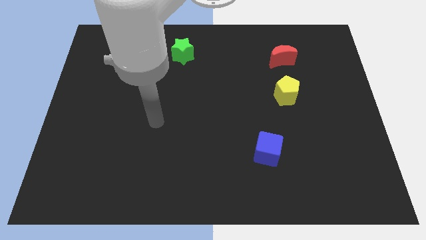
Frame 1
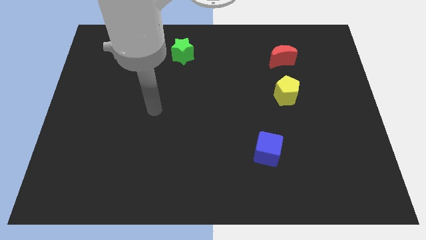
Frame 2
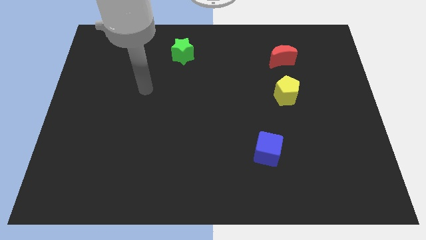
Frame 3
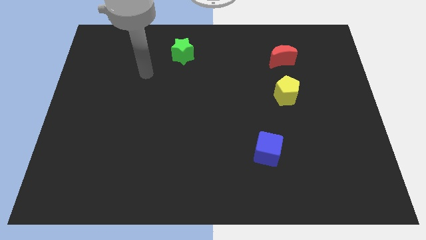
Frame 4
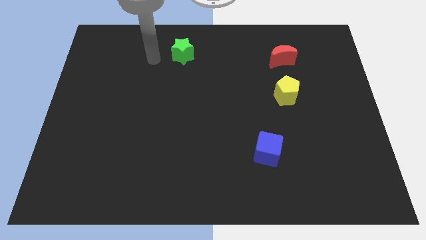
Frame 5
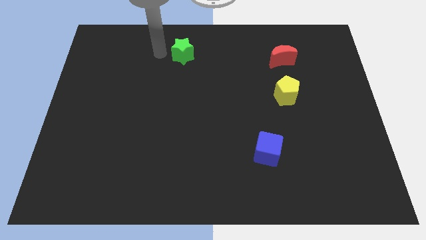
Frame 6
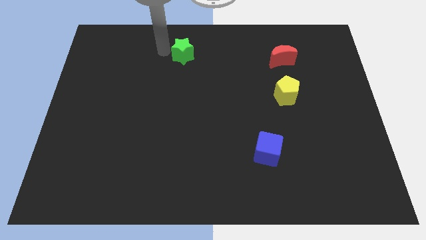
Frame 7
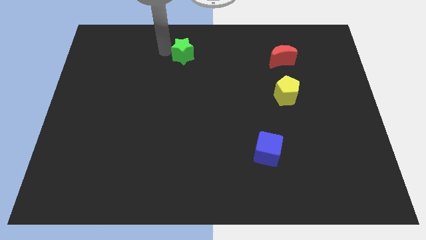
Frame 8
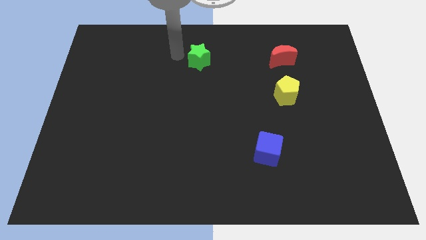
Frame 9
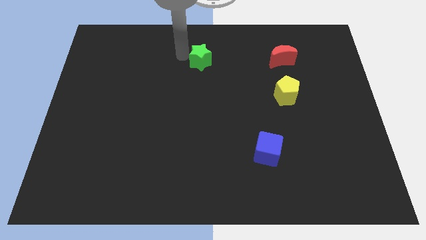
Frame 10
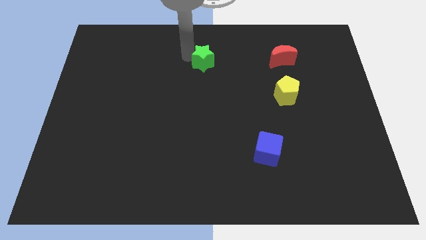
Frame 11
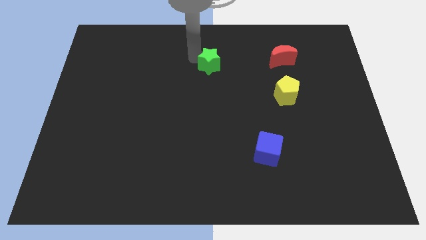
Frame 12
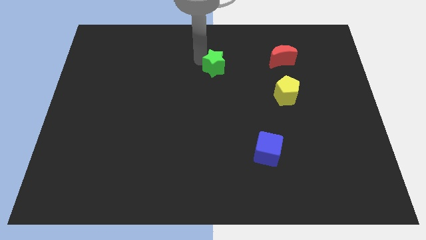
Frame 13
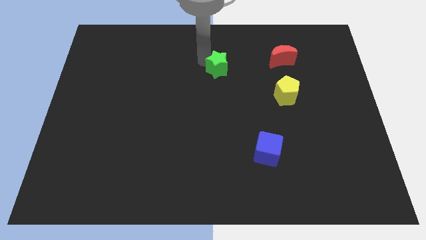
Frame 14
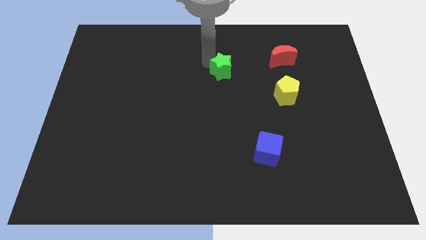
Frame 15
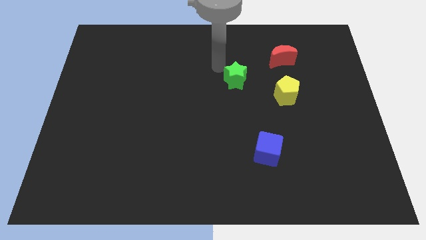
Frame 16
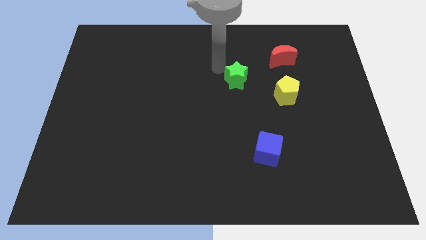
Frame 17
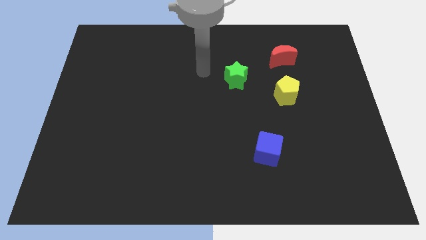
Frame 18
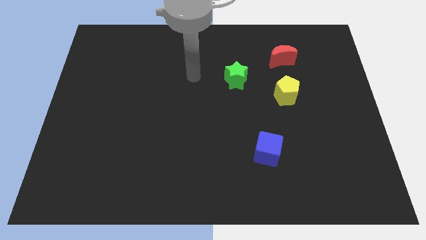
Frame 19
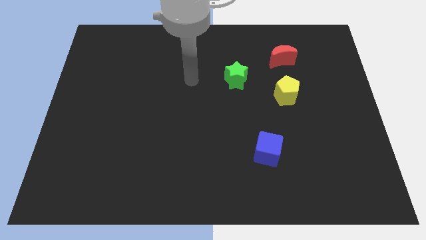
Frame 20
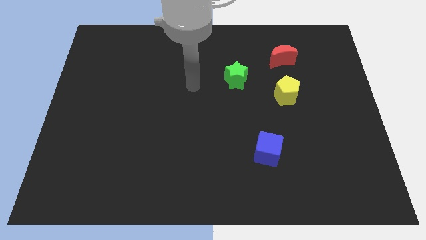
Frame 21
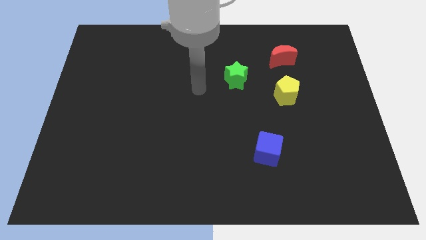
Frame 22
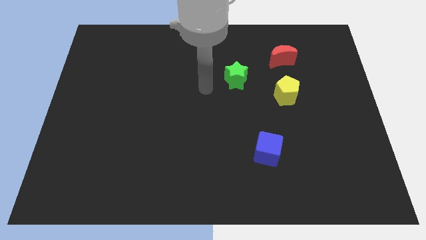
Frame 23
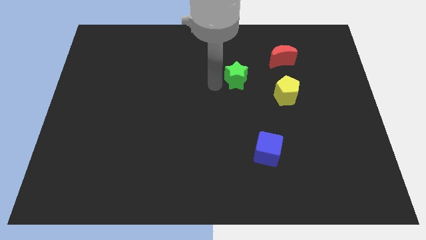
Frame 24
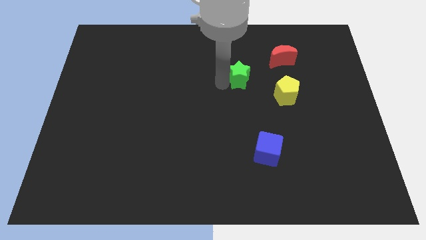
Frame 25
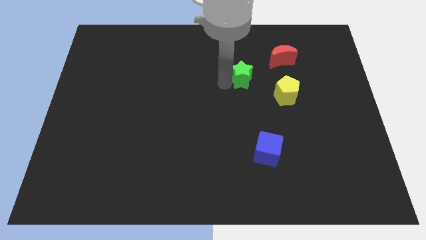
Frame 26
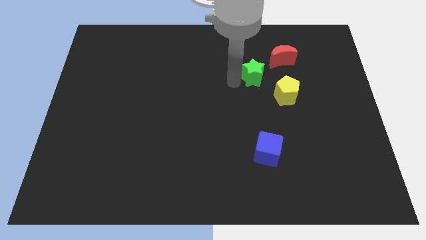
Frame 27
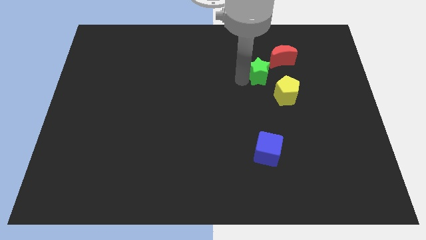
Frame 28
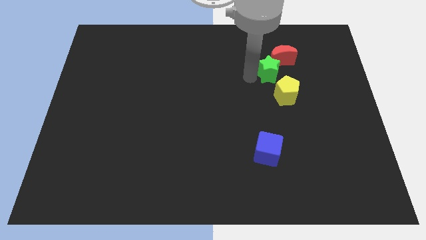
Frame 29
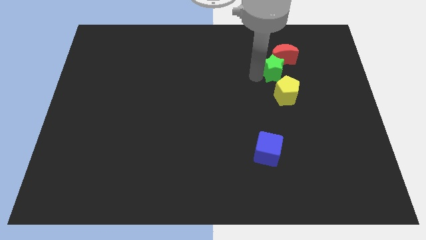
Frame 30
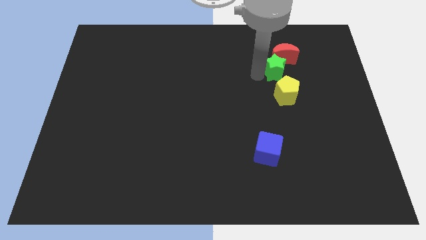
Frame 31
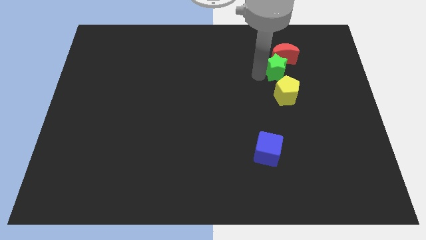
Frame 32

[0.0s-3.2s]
move the green star next to the moon

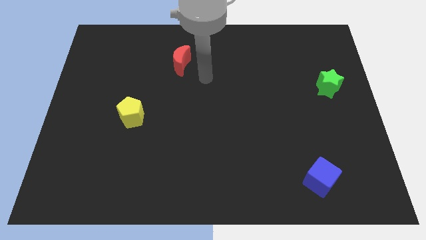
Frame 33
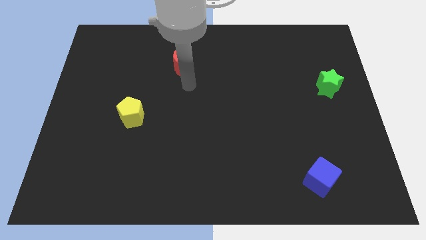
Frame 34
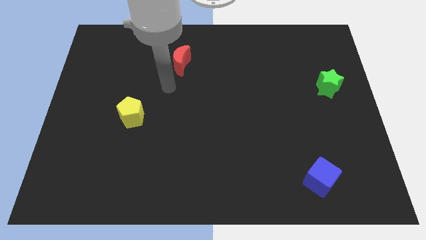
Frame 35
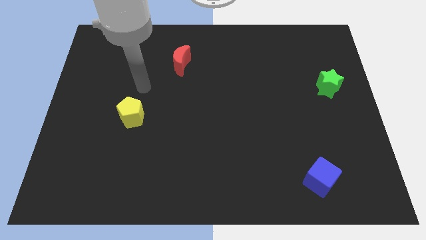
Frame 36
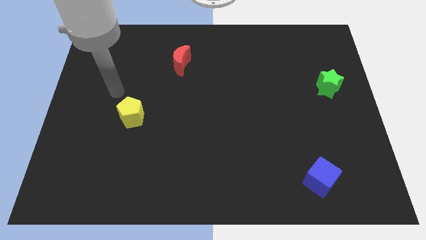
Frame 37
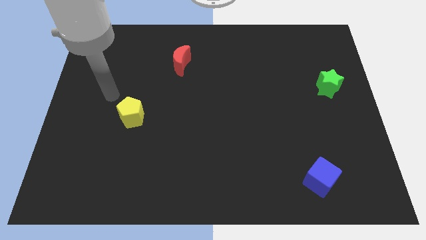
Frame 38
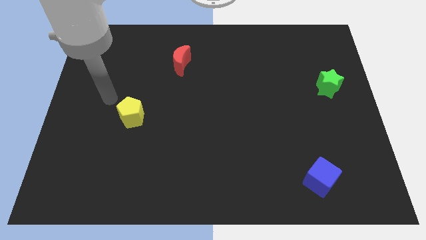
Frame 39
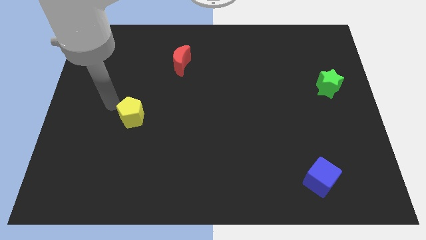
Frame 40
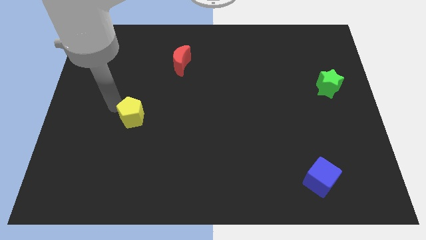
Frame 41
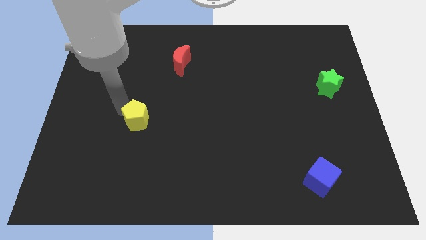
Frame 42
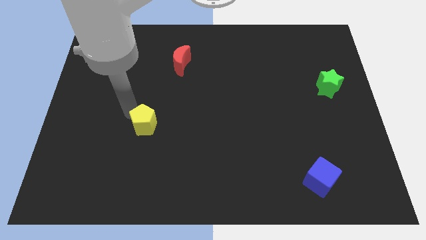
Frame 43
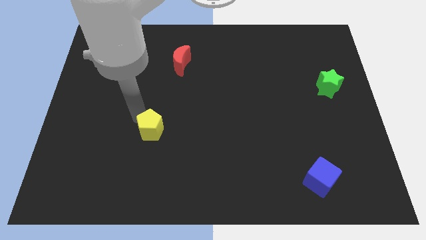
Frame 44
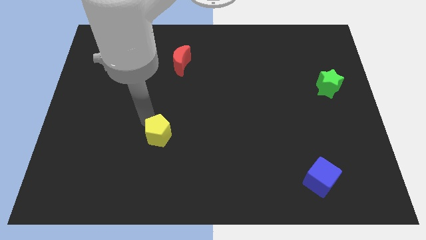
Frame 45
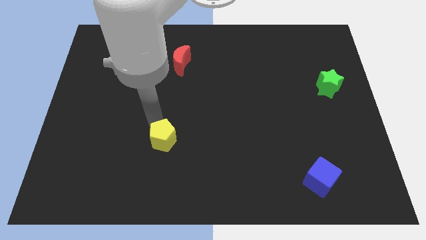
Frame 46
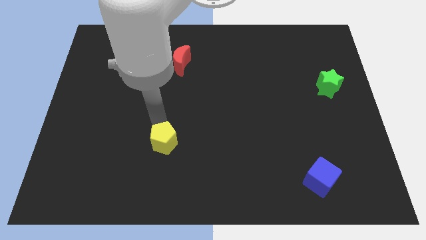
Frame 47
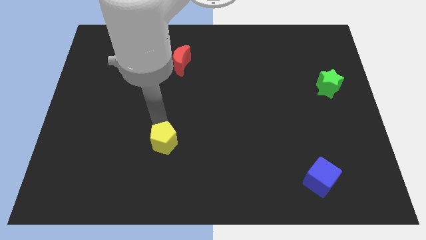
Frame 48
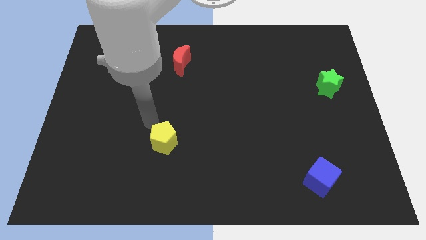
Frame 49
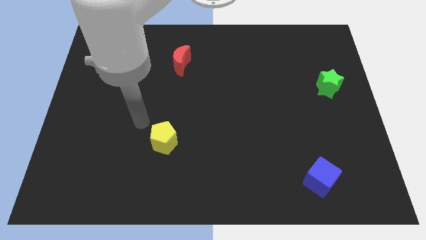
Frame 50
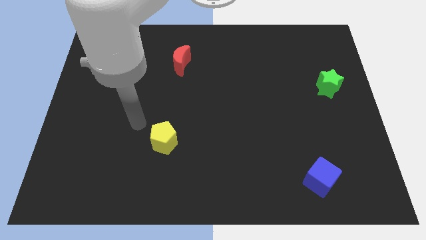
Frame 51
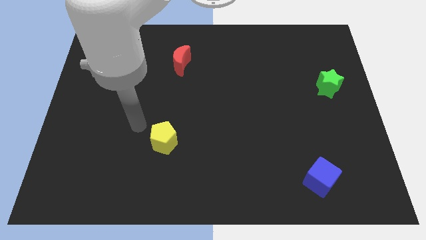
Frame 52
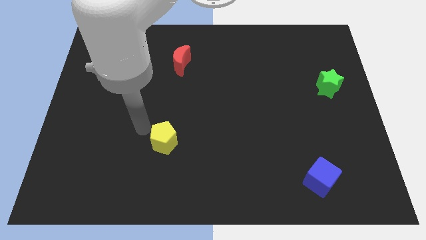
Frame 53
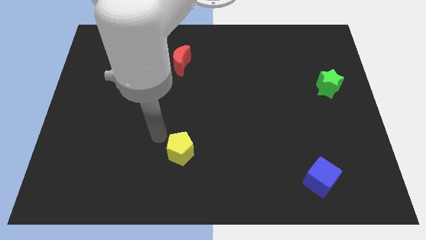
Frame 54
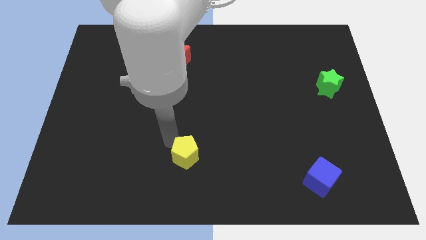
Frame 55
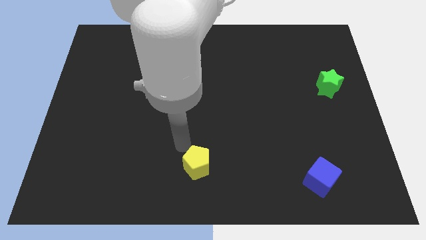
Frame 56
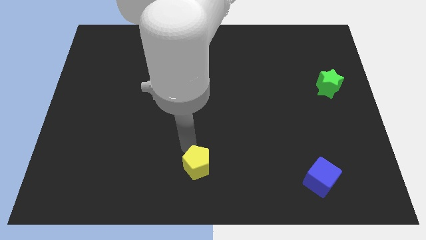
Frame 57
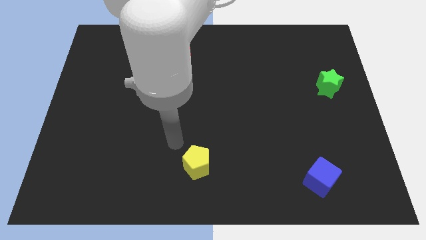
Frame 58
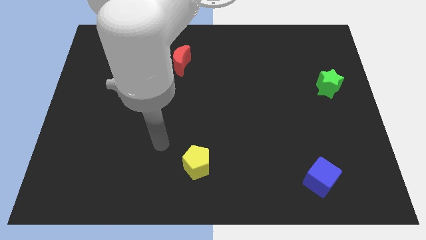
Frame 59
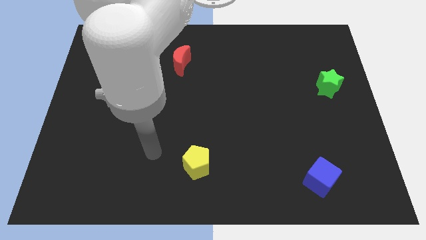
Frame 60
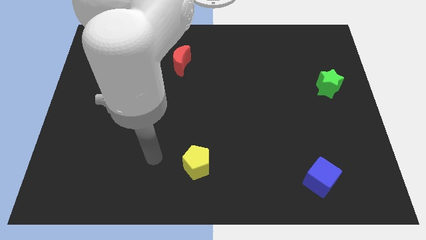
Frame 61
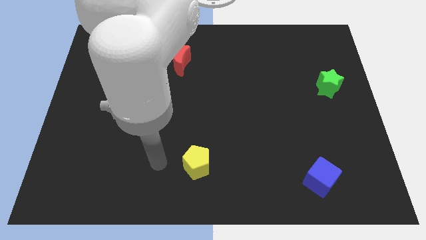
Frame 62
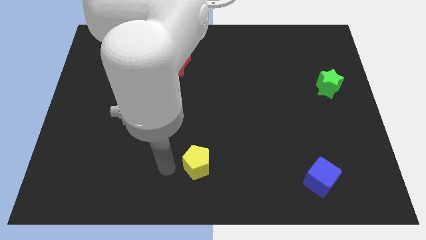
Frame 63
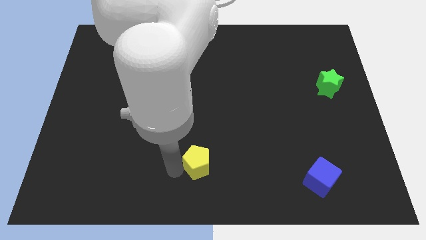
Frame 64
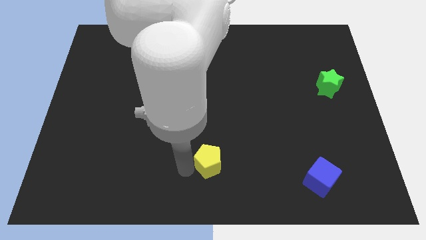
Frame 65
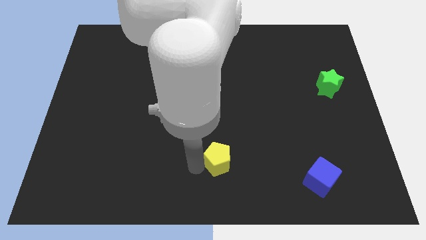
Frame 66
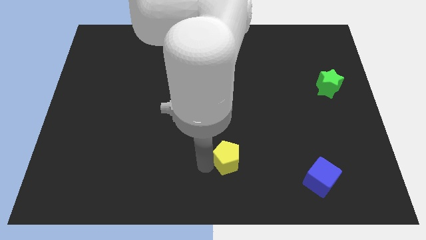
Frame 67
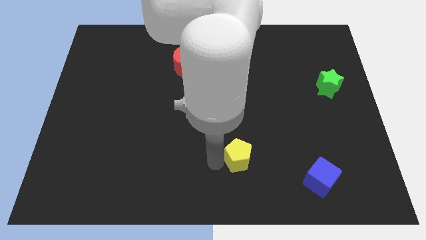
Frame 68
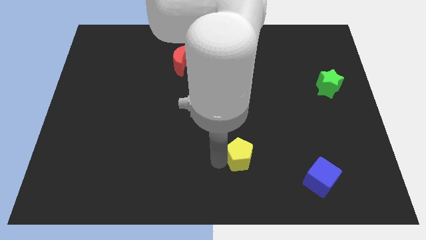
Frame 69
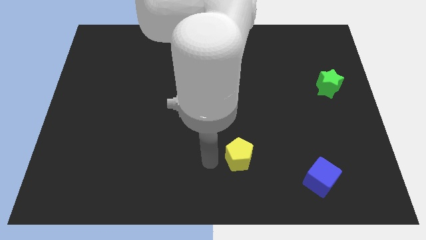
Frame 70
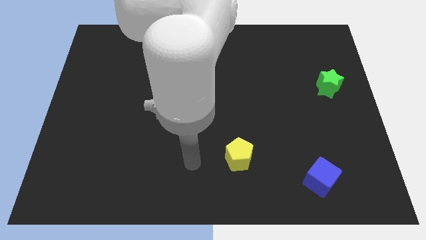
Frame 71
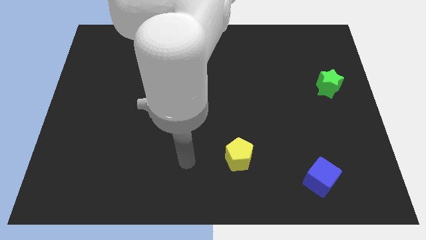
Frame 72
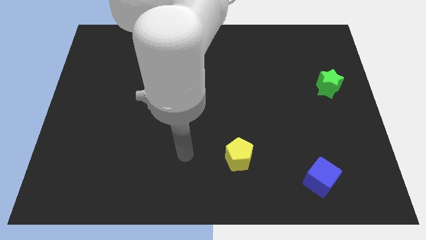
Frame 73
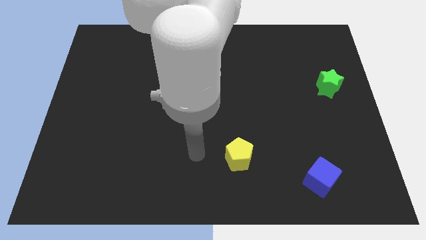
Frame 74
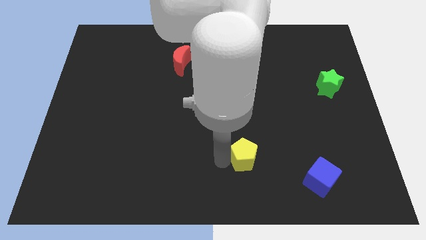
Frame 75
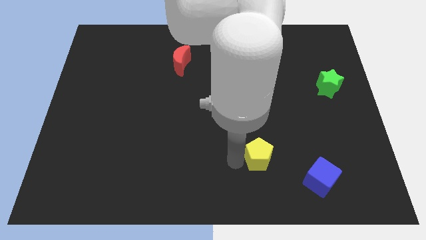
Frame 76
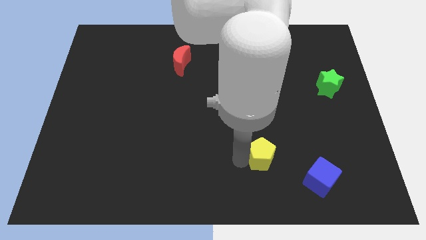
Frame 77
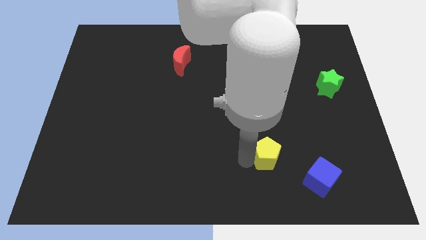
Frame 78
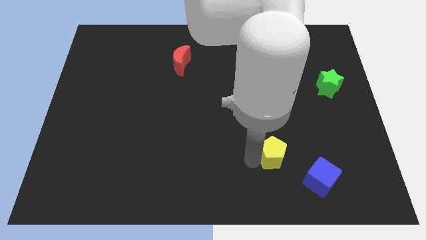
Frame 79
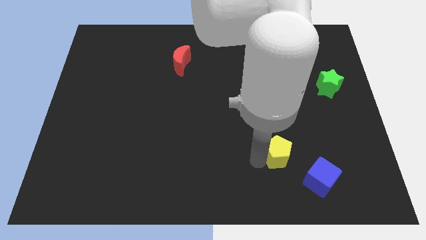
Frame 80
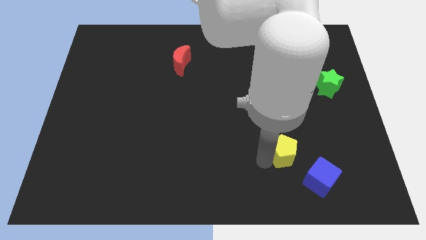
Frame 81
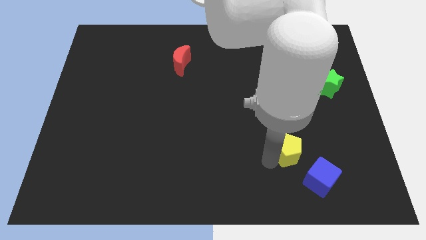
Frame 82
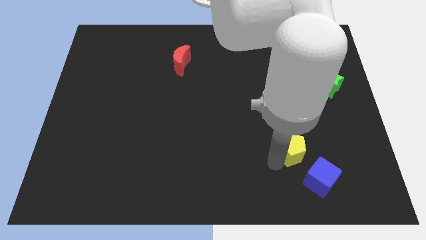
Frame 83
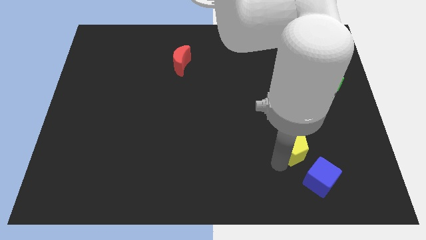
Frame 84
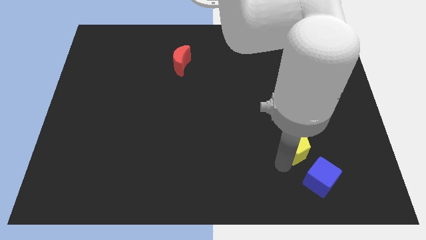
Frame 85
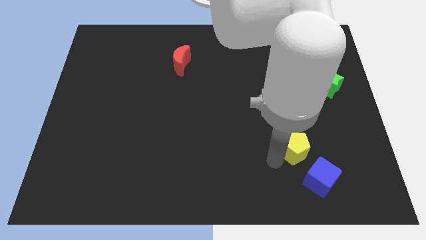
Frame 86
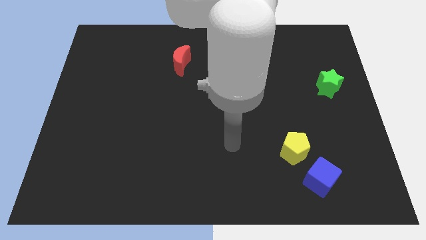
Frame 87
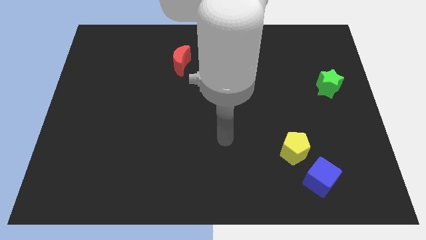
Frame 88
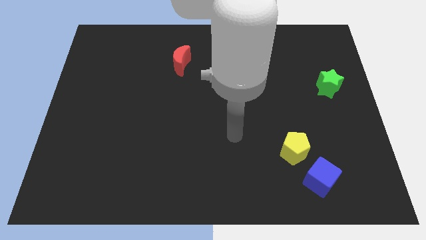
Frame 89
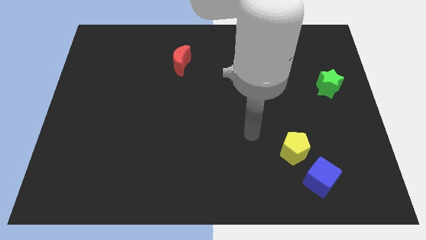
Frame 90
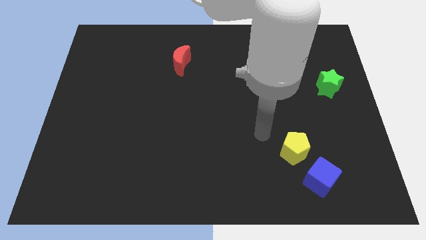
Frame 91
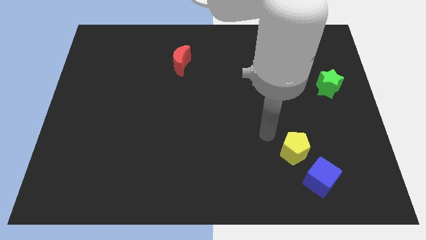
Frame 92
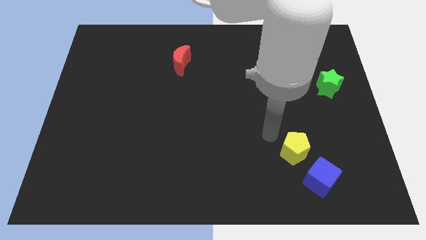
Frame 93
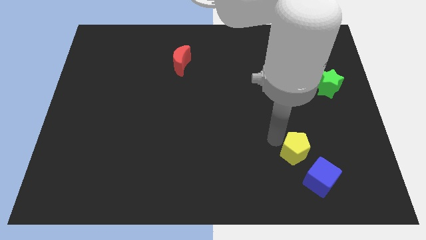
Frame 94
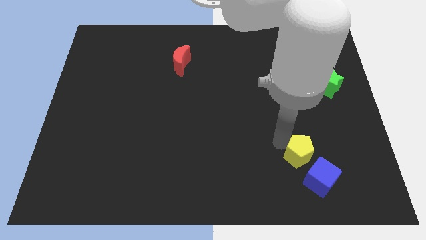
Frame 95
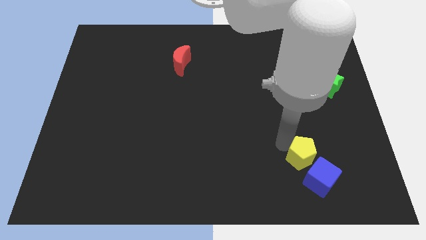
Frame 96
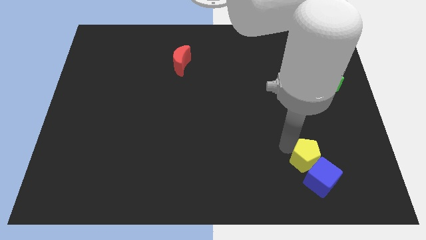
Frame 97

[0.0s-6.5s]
slide the yellow block close to the blue block
